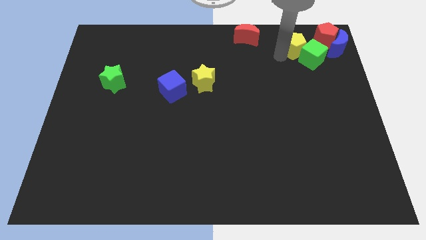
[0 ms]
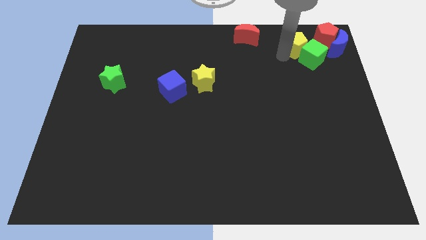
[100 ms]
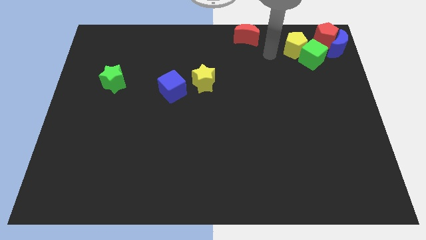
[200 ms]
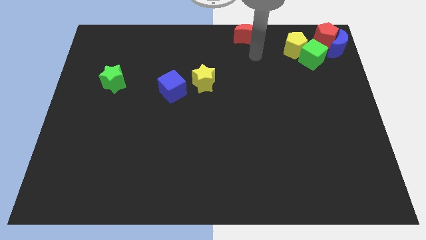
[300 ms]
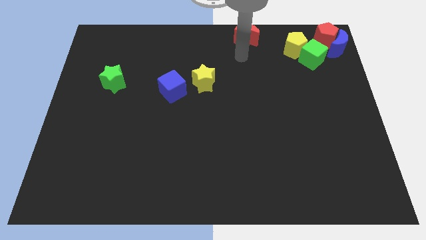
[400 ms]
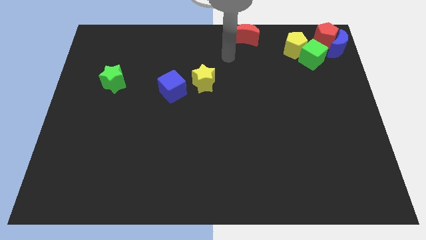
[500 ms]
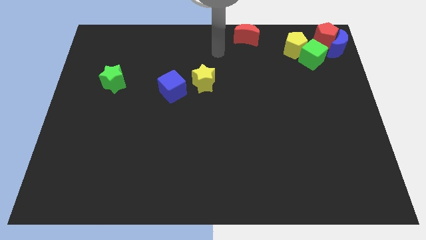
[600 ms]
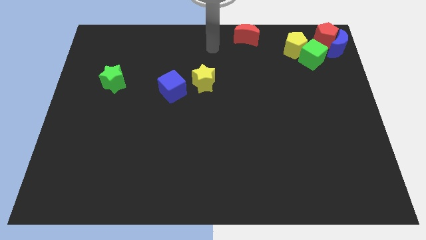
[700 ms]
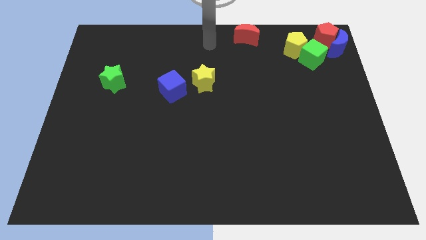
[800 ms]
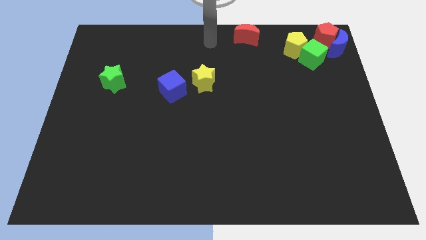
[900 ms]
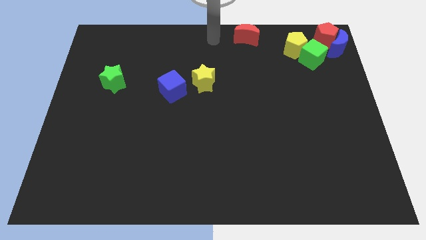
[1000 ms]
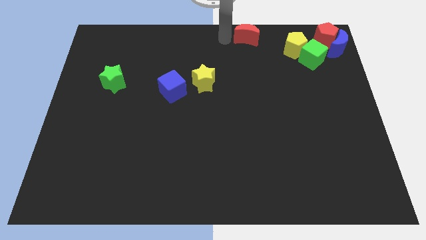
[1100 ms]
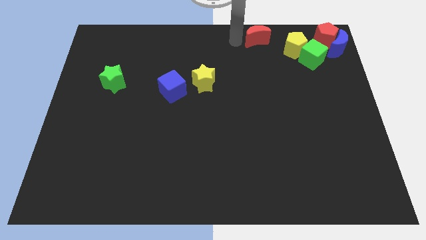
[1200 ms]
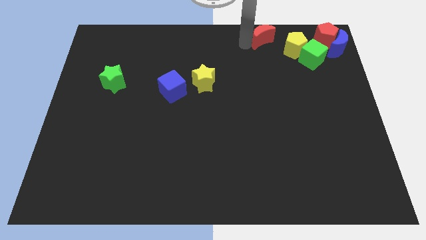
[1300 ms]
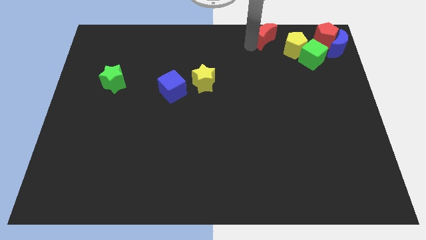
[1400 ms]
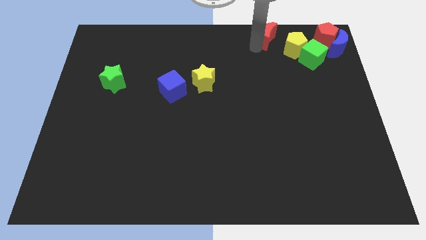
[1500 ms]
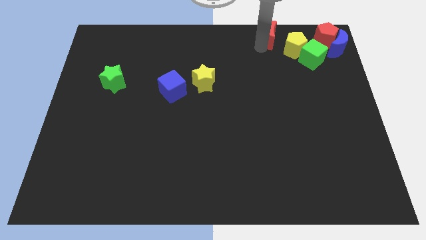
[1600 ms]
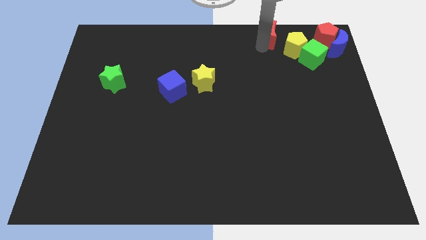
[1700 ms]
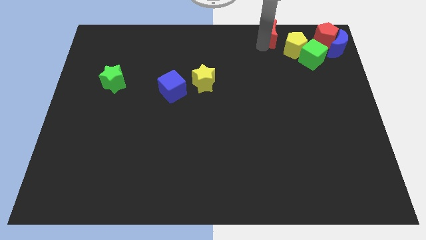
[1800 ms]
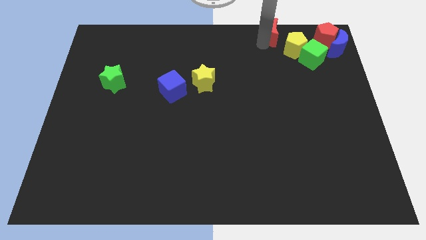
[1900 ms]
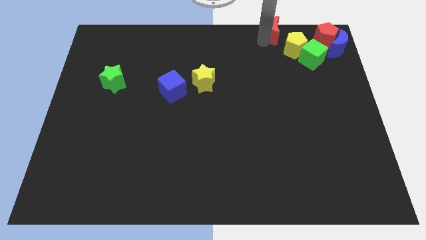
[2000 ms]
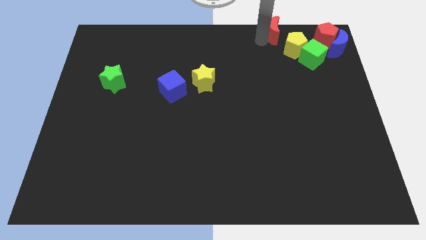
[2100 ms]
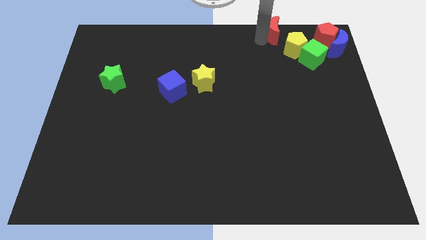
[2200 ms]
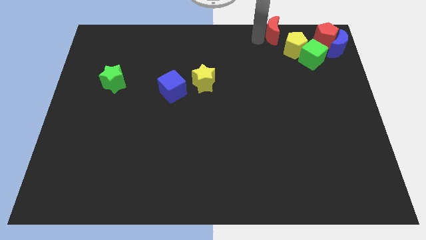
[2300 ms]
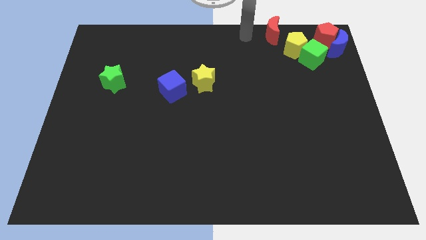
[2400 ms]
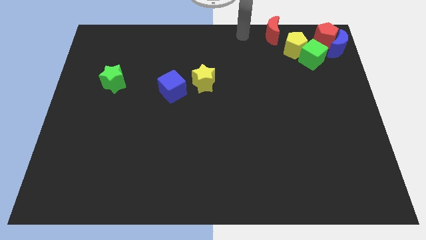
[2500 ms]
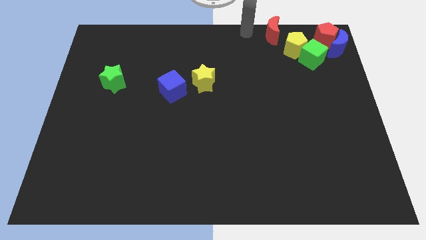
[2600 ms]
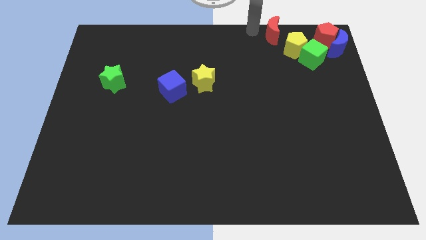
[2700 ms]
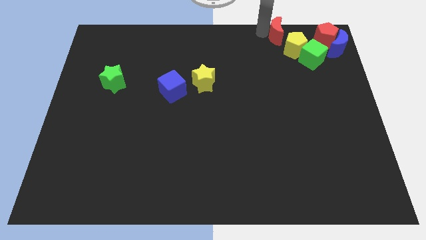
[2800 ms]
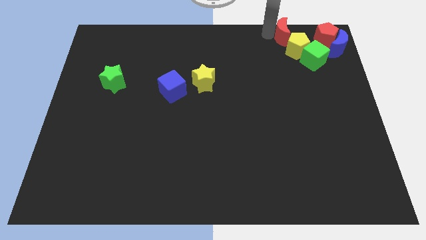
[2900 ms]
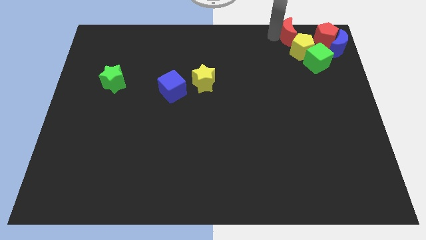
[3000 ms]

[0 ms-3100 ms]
move the red crescent towards the yellow pentagon

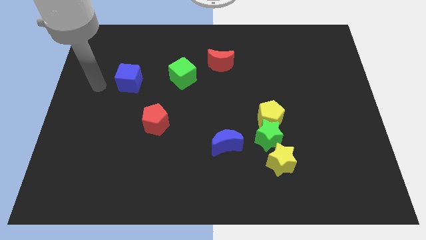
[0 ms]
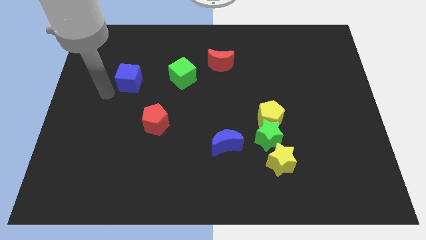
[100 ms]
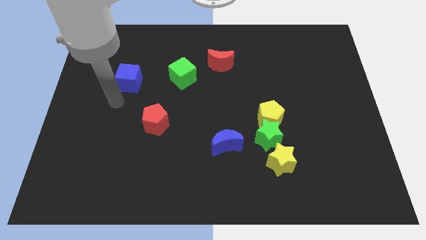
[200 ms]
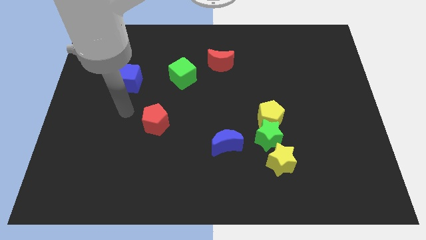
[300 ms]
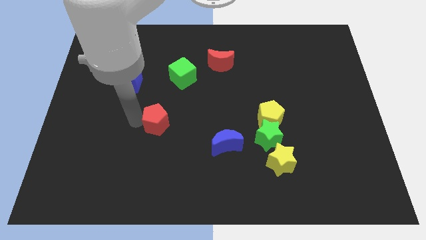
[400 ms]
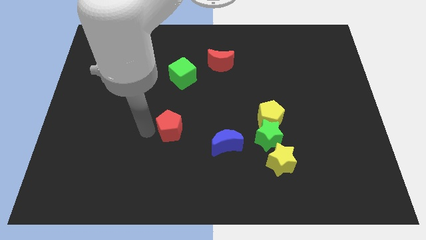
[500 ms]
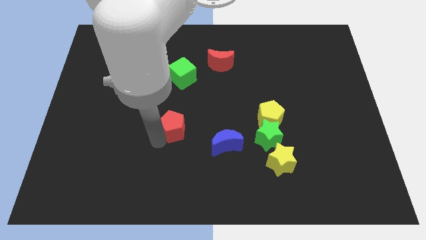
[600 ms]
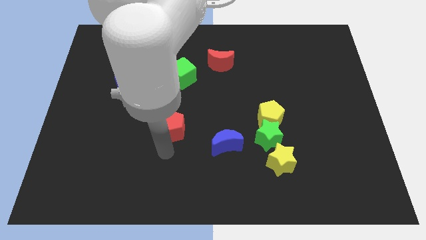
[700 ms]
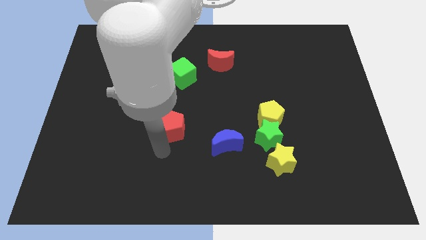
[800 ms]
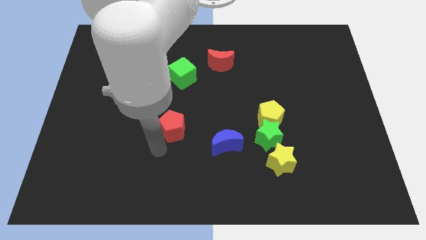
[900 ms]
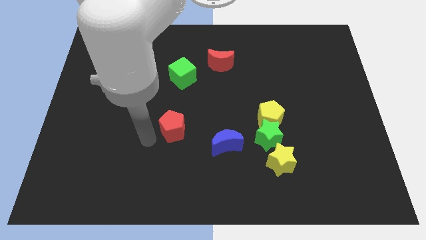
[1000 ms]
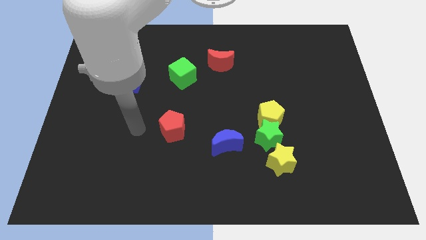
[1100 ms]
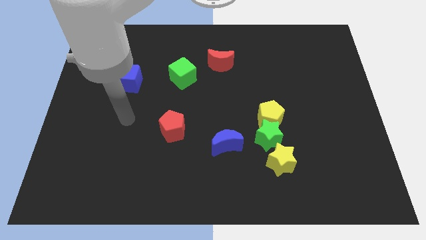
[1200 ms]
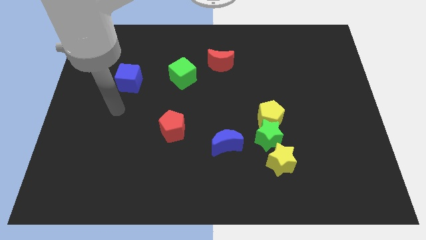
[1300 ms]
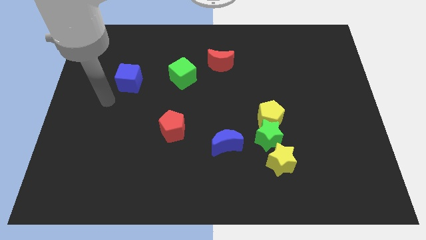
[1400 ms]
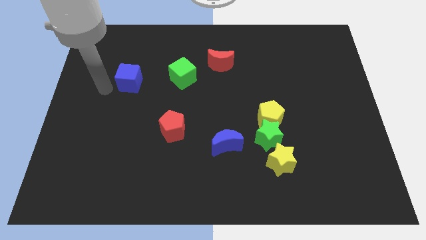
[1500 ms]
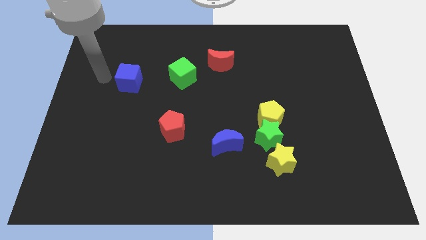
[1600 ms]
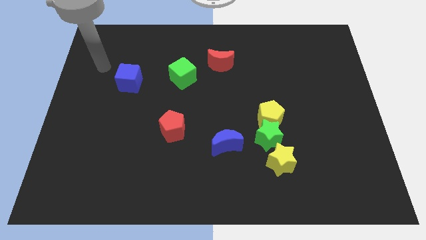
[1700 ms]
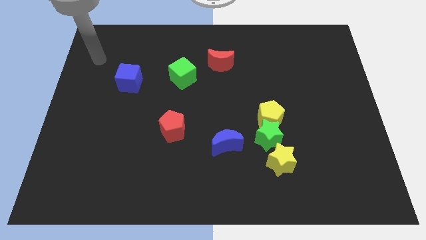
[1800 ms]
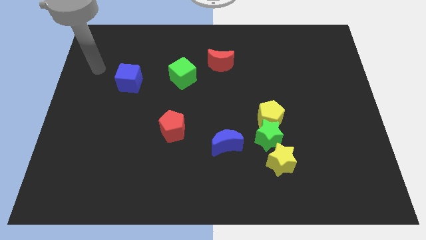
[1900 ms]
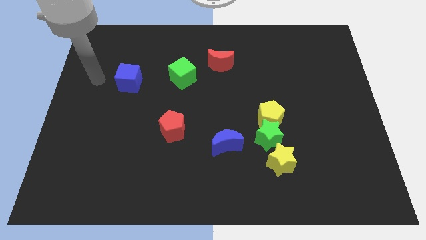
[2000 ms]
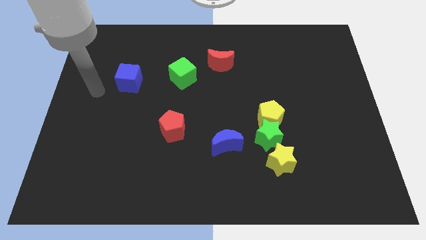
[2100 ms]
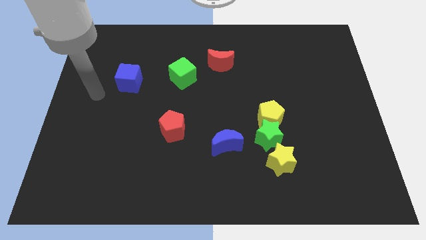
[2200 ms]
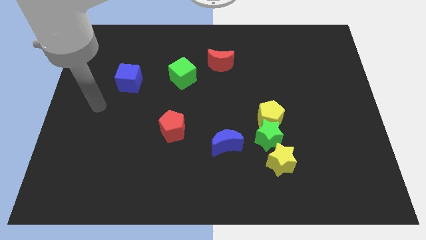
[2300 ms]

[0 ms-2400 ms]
slightly touch the red pentagon

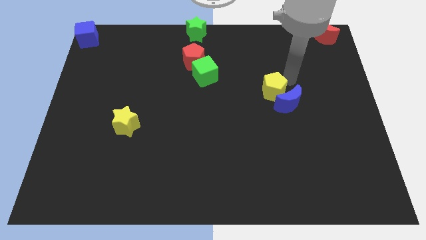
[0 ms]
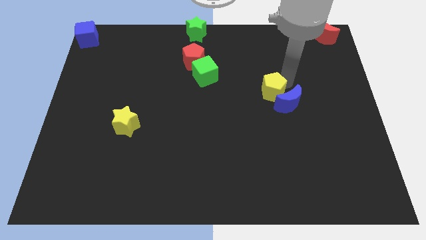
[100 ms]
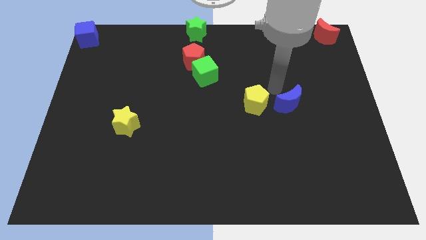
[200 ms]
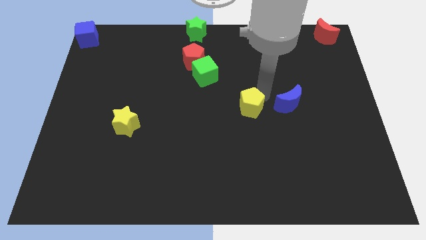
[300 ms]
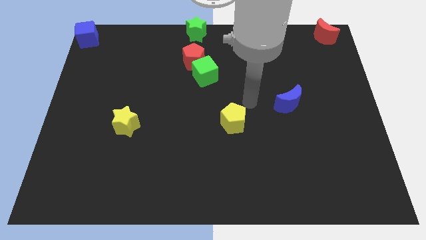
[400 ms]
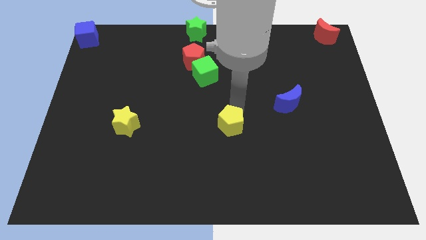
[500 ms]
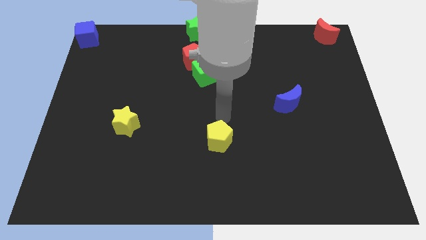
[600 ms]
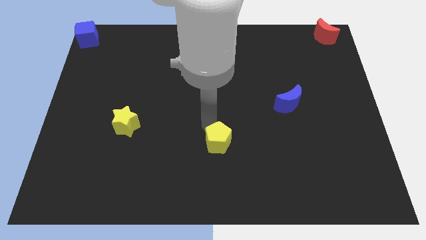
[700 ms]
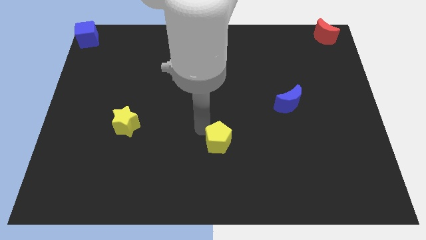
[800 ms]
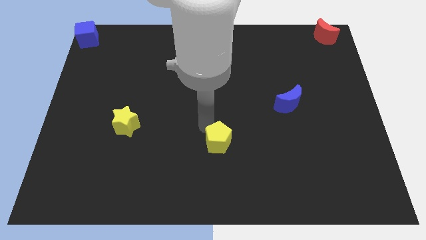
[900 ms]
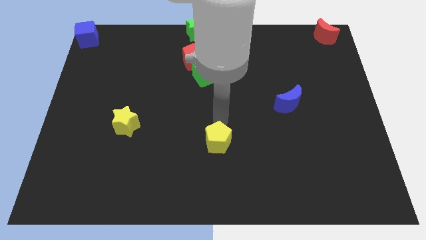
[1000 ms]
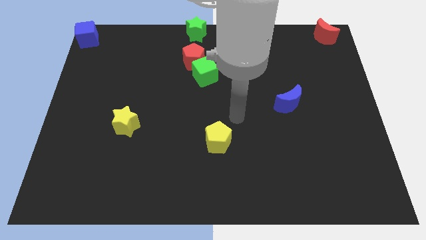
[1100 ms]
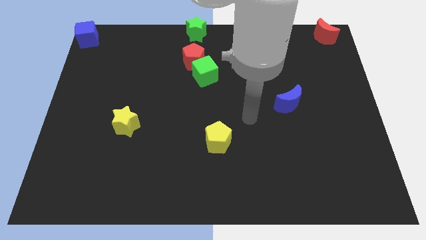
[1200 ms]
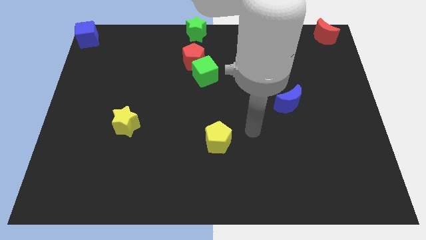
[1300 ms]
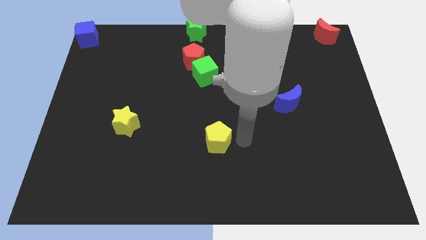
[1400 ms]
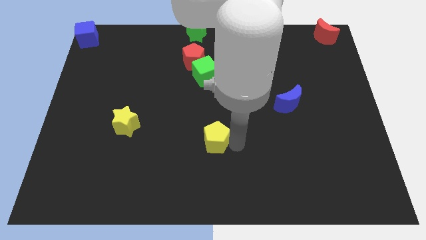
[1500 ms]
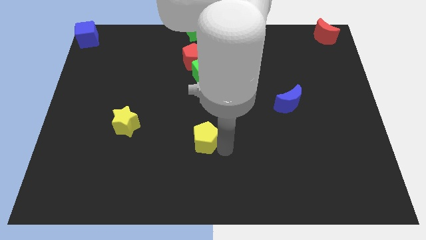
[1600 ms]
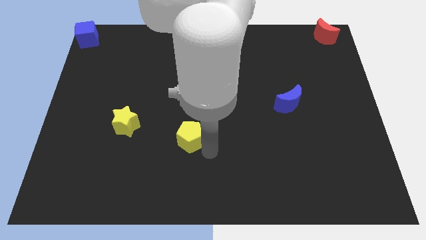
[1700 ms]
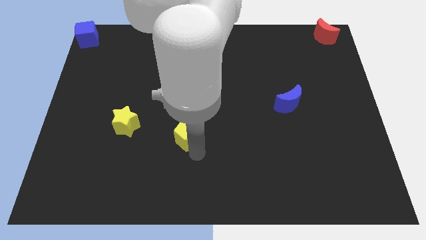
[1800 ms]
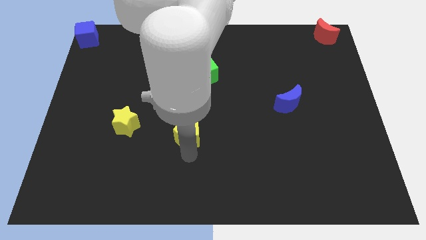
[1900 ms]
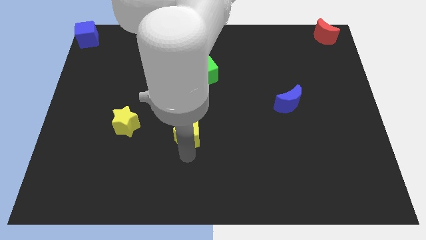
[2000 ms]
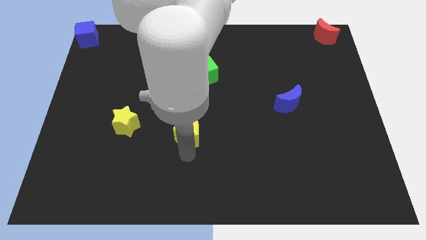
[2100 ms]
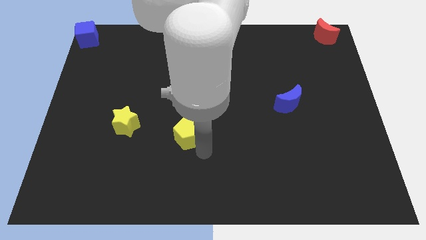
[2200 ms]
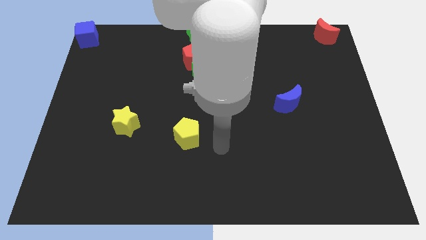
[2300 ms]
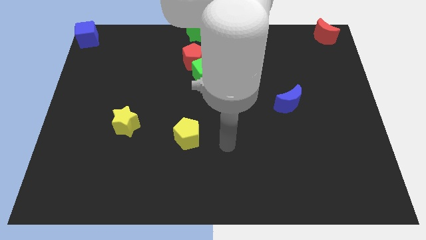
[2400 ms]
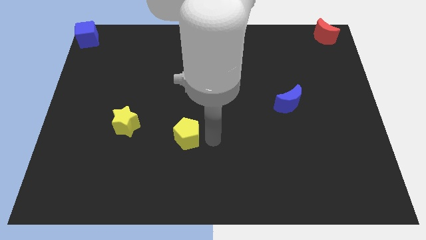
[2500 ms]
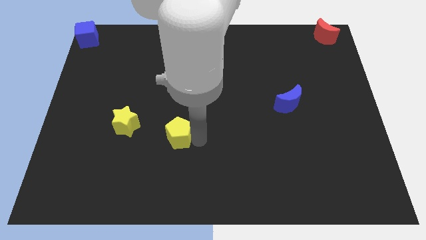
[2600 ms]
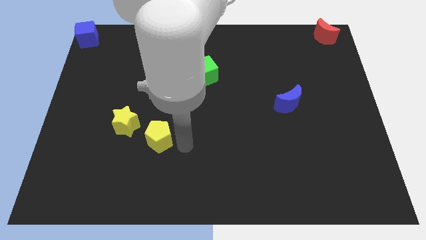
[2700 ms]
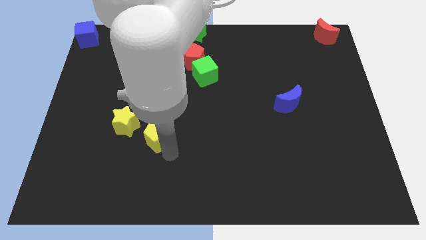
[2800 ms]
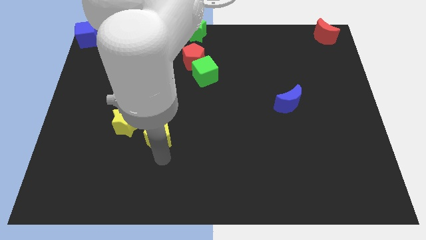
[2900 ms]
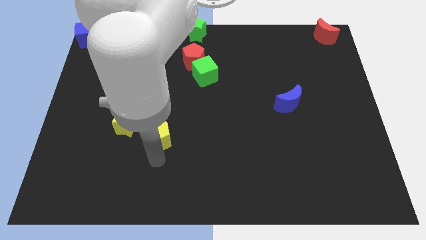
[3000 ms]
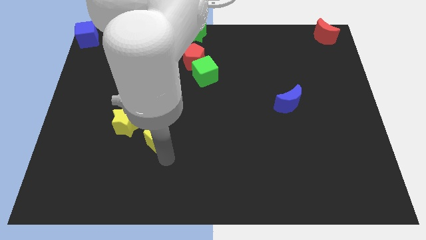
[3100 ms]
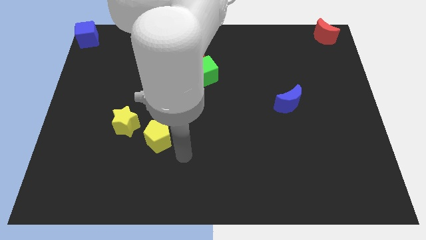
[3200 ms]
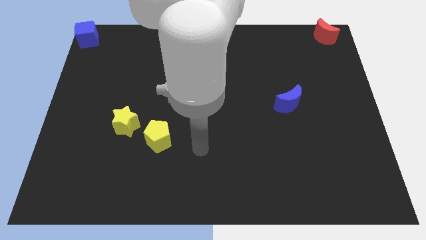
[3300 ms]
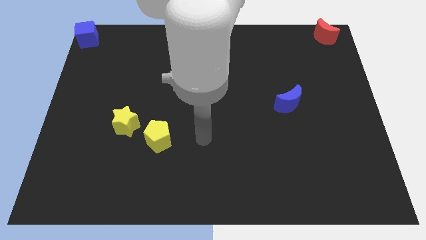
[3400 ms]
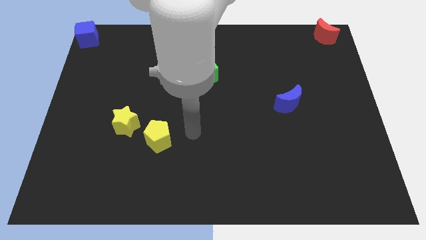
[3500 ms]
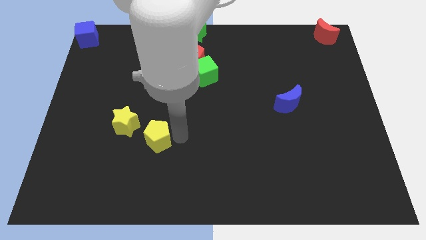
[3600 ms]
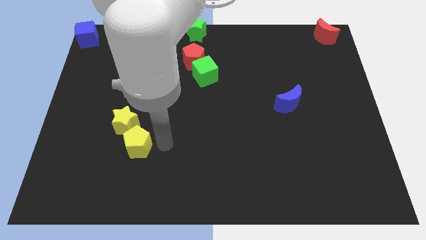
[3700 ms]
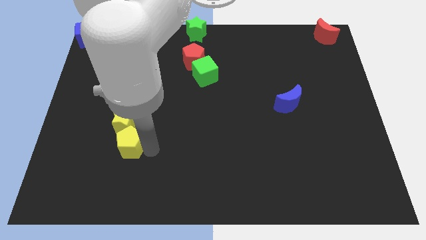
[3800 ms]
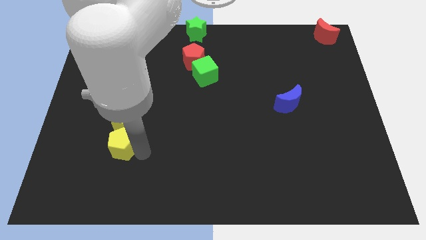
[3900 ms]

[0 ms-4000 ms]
push the yellow pentagon down to the yellow star
